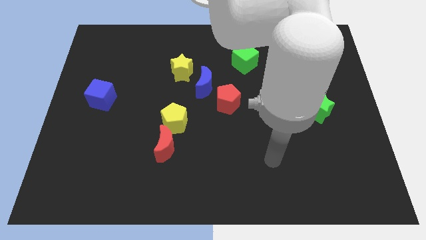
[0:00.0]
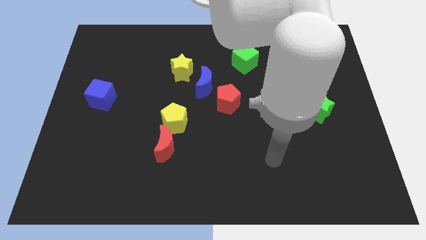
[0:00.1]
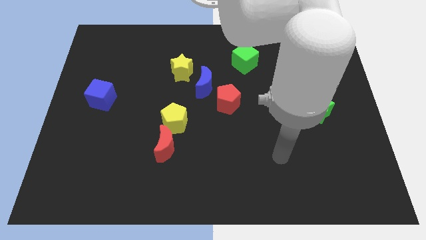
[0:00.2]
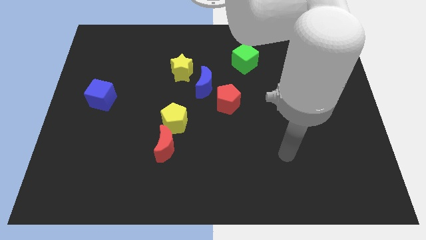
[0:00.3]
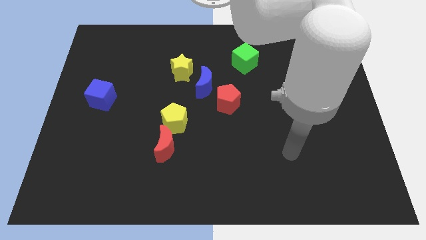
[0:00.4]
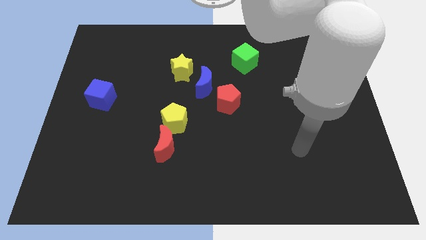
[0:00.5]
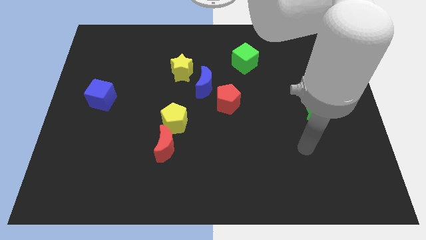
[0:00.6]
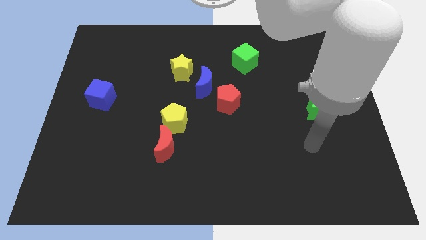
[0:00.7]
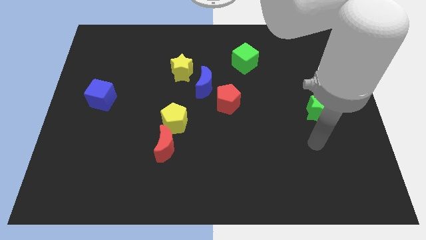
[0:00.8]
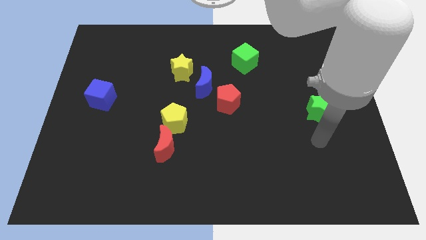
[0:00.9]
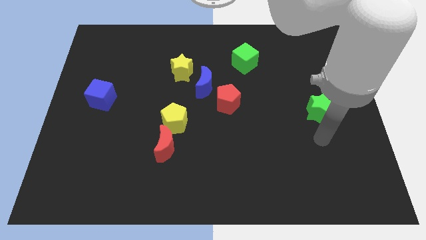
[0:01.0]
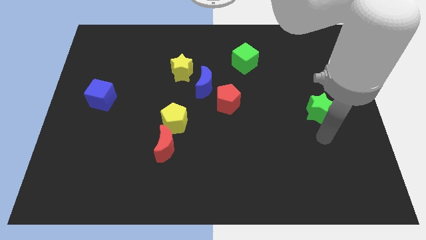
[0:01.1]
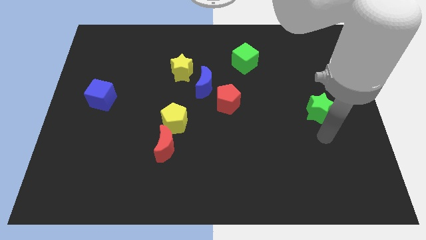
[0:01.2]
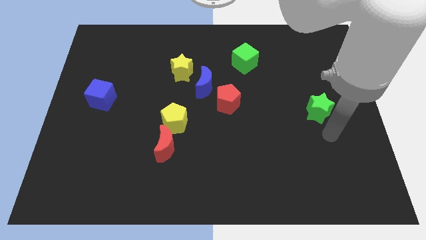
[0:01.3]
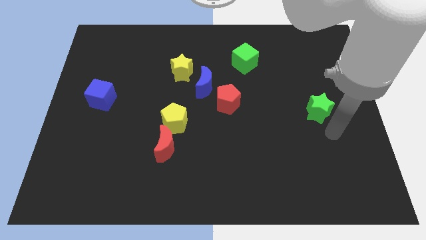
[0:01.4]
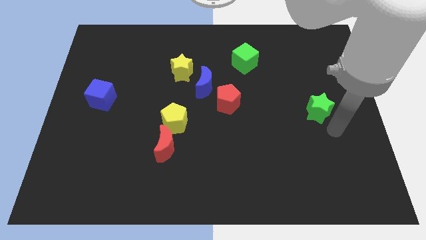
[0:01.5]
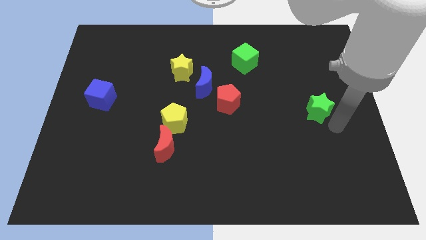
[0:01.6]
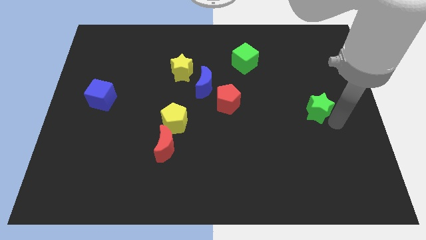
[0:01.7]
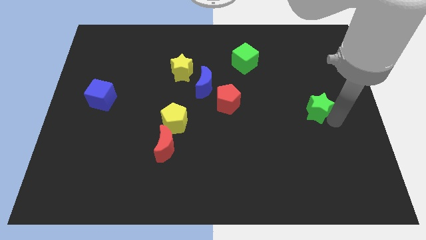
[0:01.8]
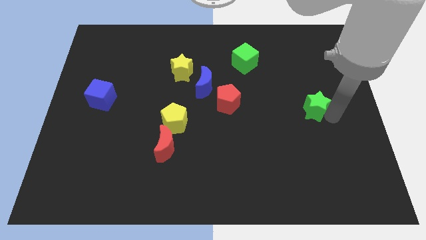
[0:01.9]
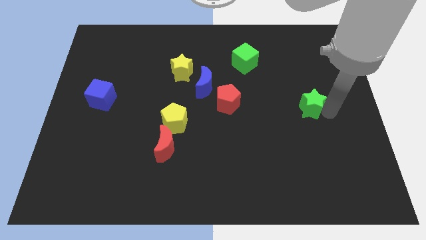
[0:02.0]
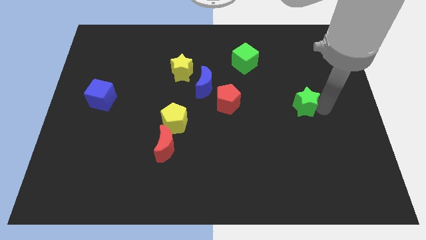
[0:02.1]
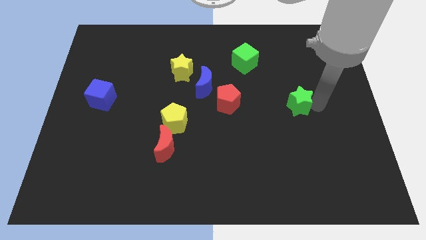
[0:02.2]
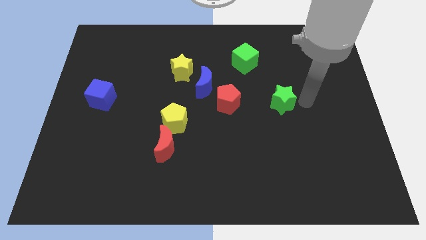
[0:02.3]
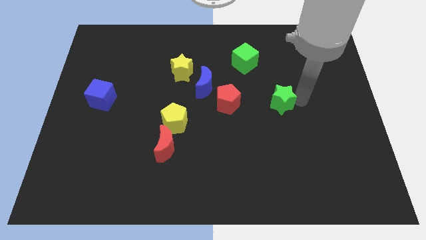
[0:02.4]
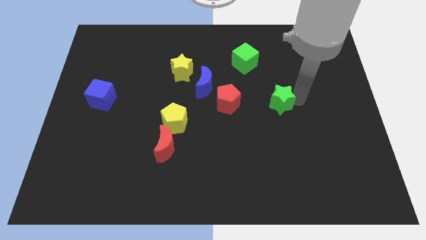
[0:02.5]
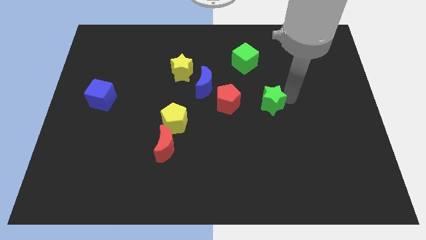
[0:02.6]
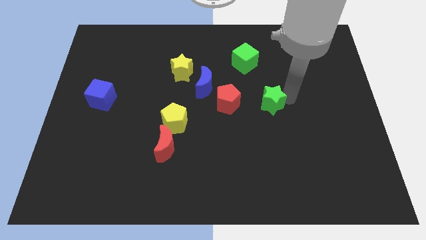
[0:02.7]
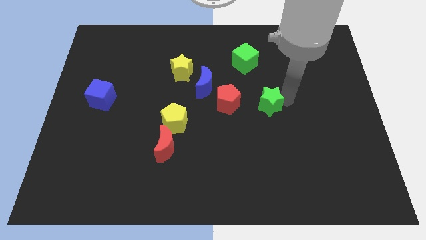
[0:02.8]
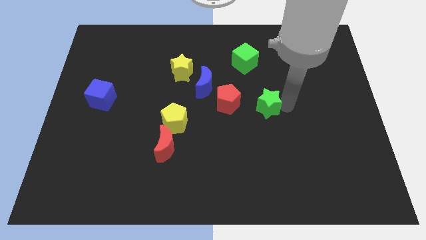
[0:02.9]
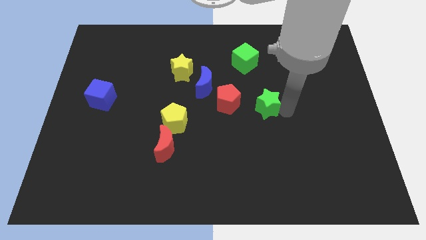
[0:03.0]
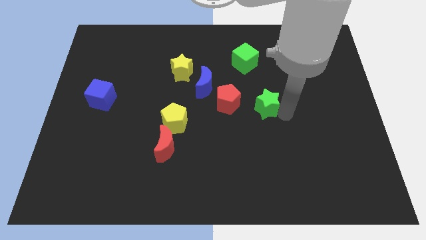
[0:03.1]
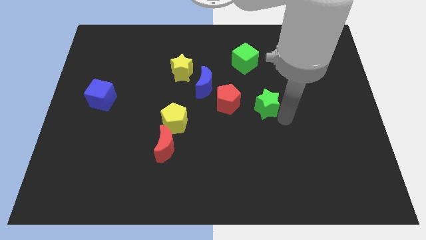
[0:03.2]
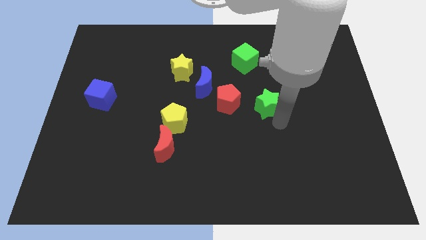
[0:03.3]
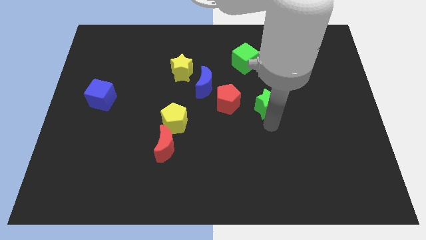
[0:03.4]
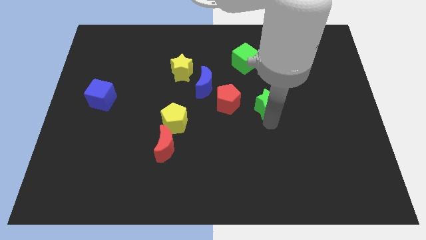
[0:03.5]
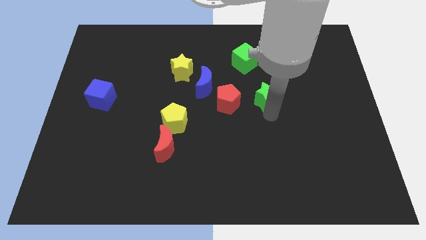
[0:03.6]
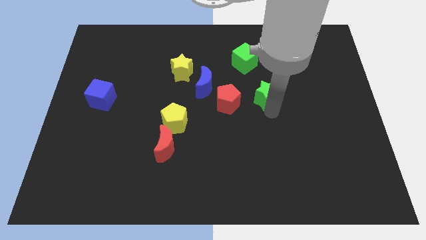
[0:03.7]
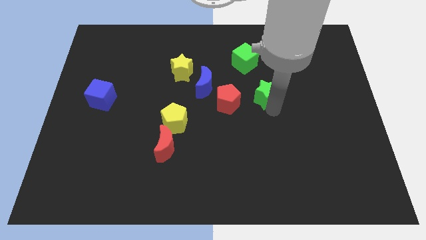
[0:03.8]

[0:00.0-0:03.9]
move the green star towards the green cube

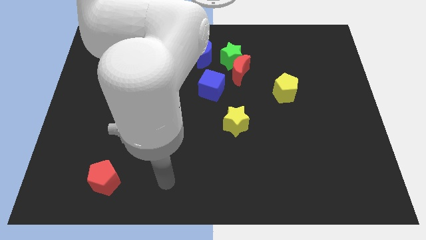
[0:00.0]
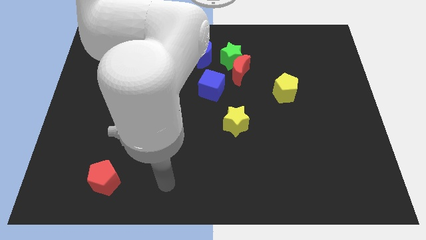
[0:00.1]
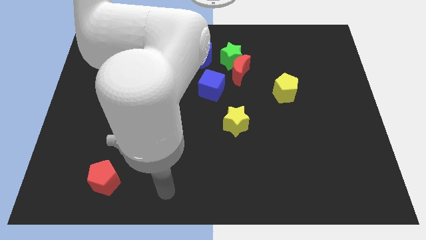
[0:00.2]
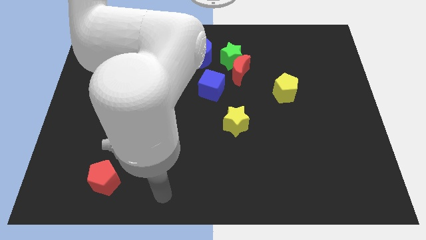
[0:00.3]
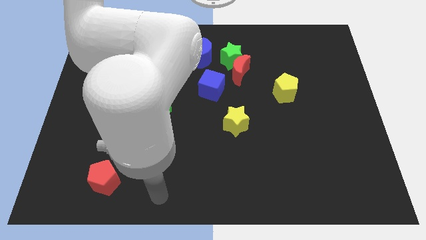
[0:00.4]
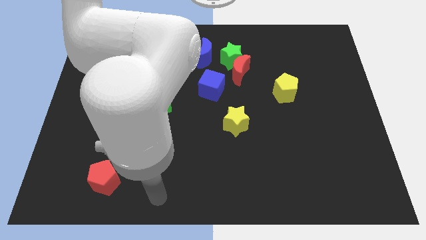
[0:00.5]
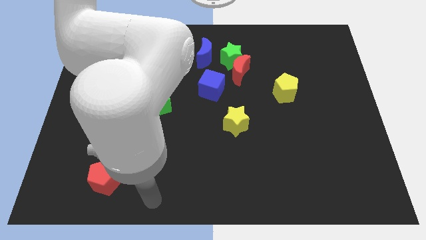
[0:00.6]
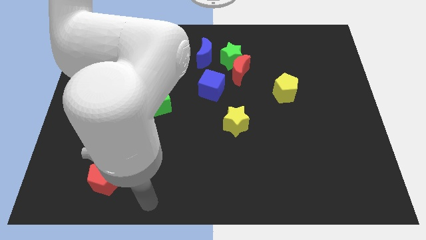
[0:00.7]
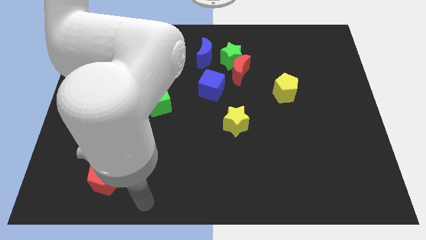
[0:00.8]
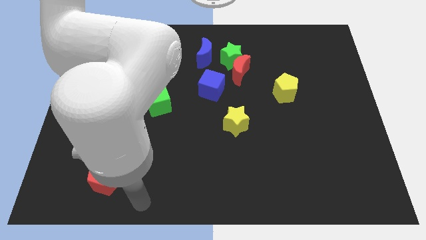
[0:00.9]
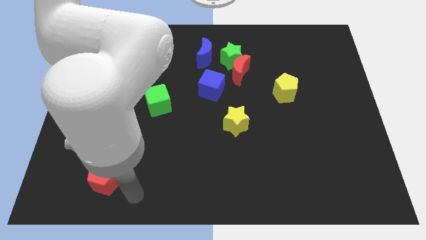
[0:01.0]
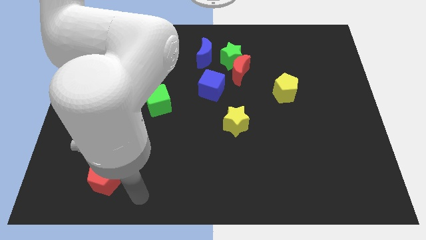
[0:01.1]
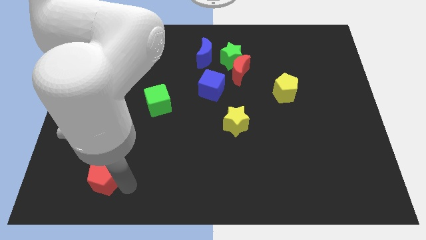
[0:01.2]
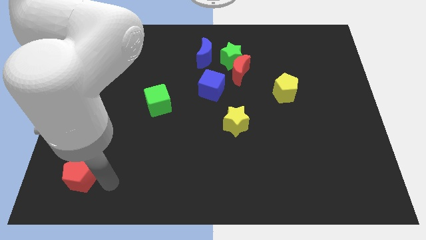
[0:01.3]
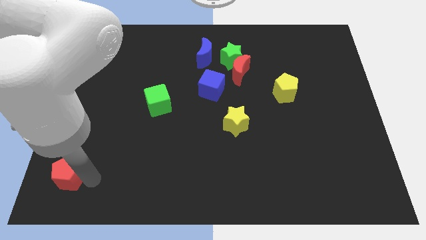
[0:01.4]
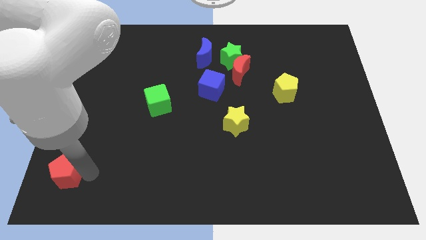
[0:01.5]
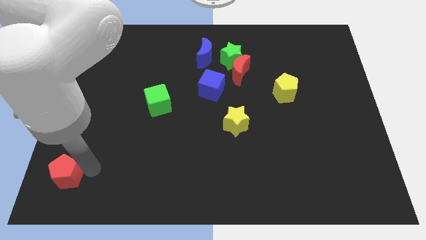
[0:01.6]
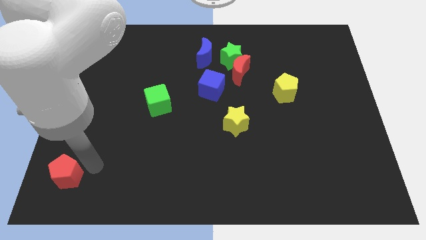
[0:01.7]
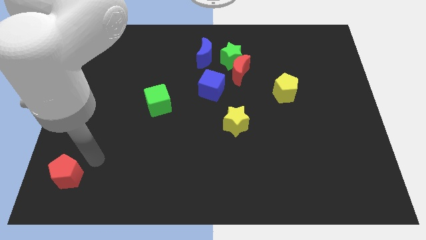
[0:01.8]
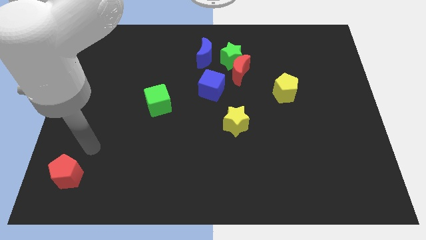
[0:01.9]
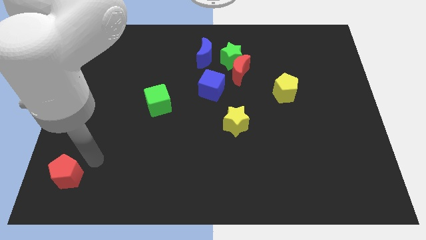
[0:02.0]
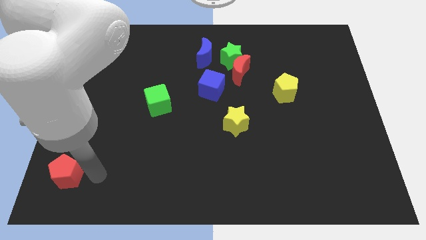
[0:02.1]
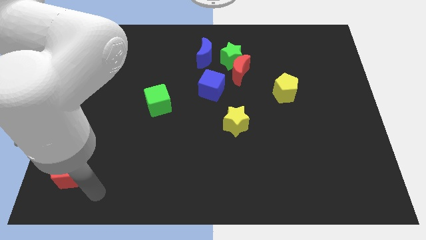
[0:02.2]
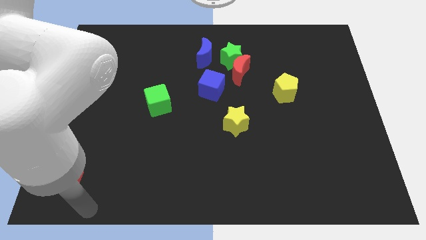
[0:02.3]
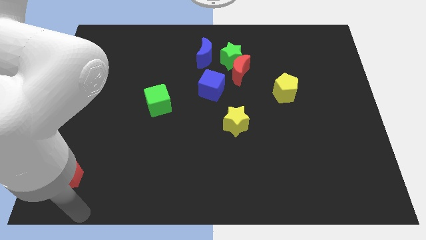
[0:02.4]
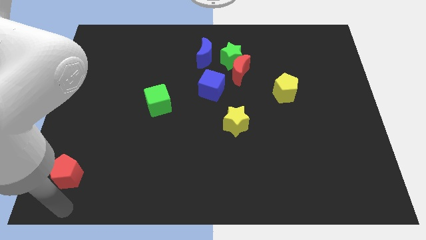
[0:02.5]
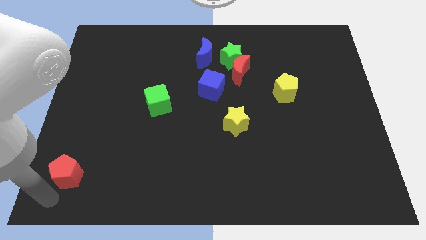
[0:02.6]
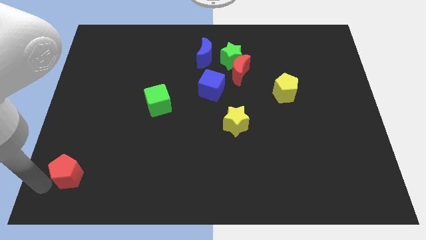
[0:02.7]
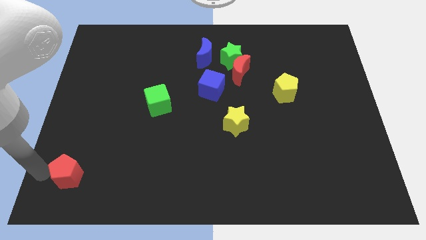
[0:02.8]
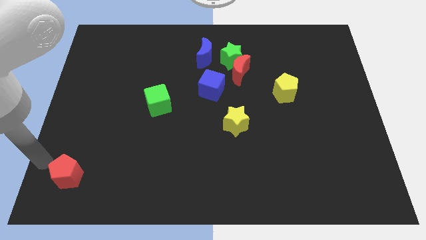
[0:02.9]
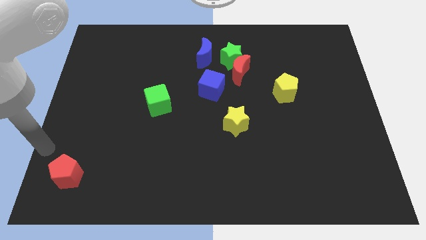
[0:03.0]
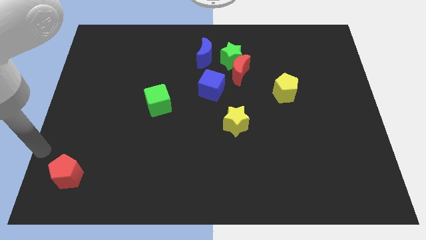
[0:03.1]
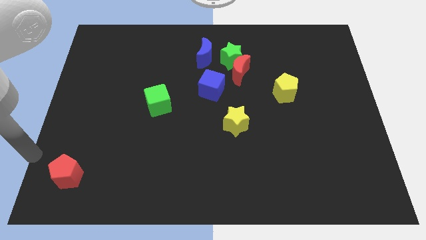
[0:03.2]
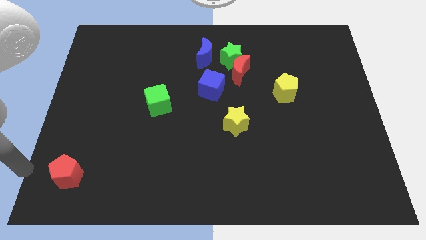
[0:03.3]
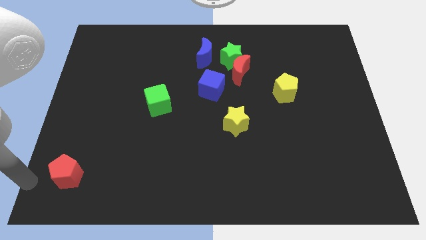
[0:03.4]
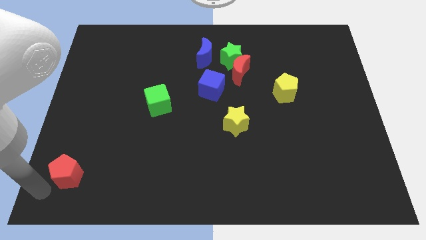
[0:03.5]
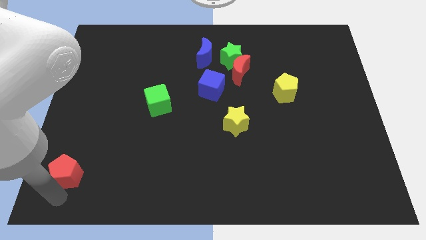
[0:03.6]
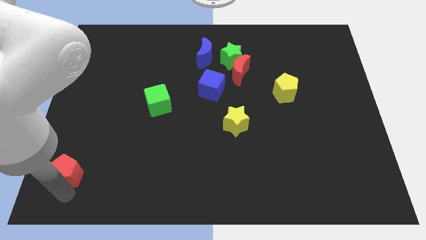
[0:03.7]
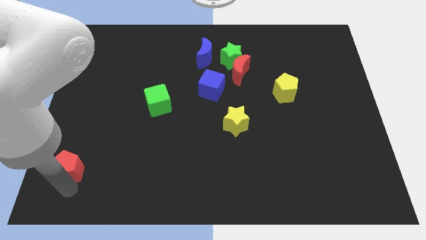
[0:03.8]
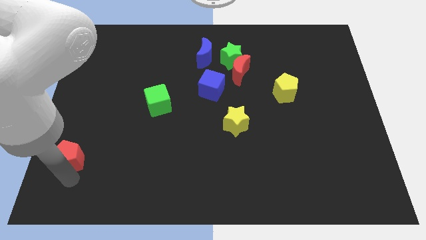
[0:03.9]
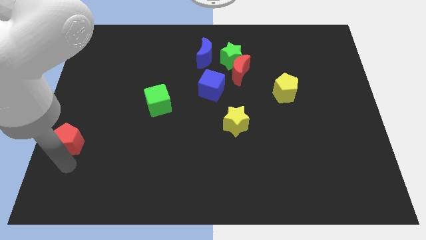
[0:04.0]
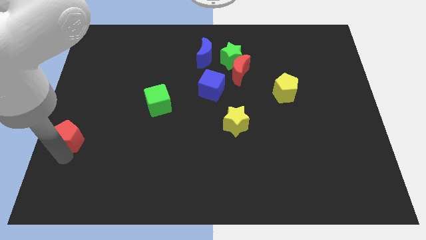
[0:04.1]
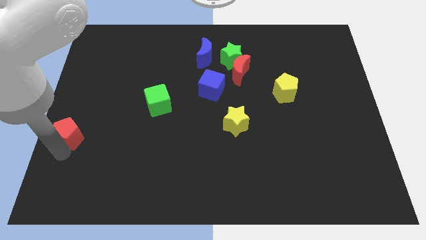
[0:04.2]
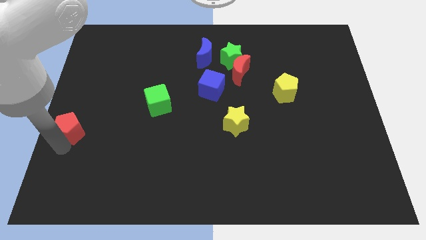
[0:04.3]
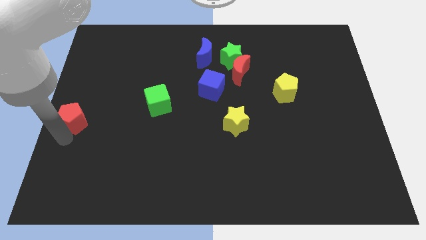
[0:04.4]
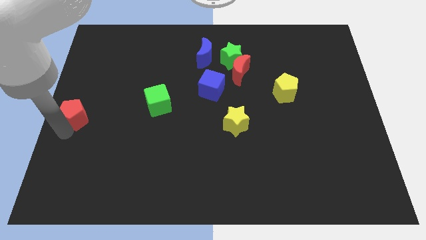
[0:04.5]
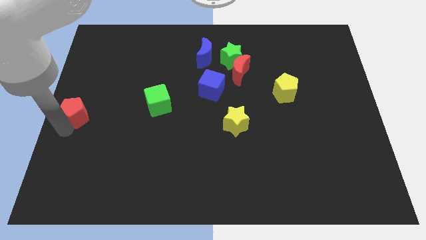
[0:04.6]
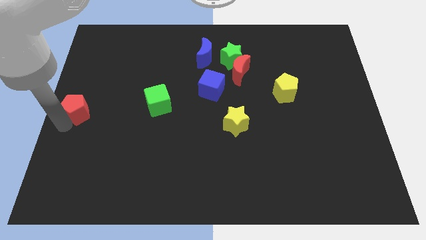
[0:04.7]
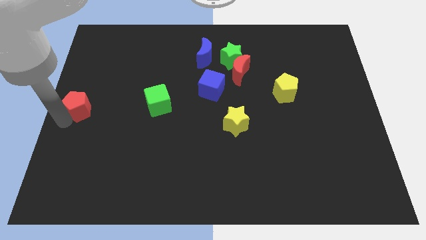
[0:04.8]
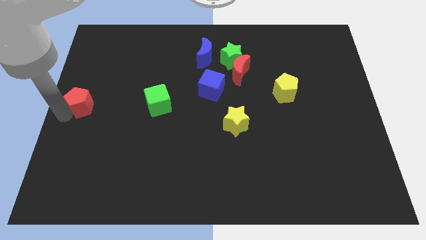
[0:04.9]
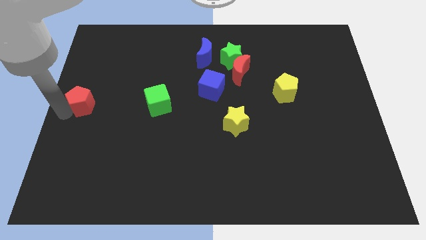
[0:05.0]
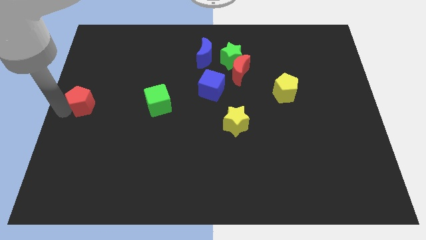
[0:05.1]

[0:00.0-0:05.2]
put the red pentagon to the center left side of the board
